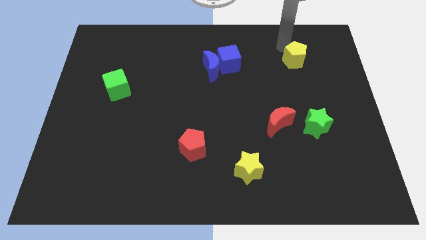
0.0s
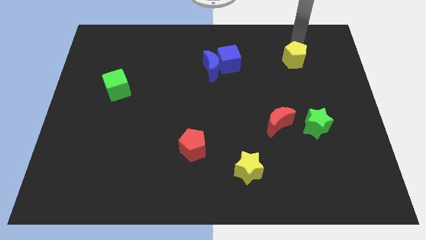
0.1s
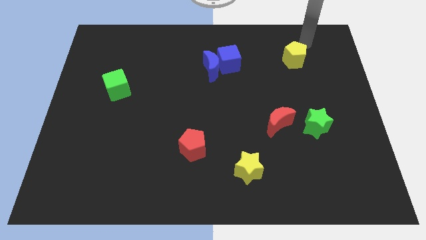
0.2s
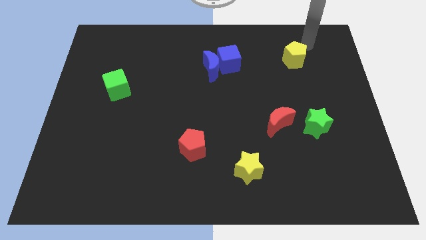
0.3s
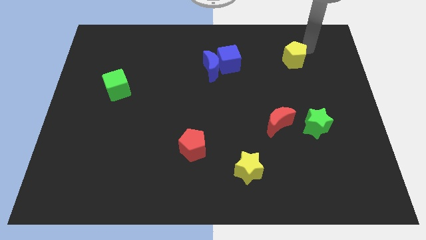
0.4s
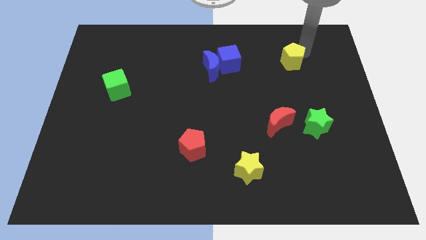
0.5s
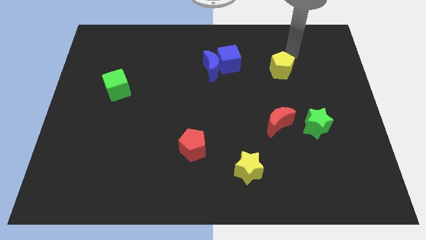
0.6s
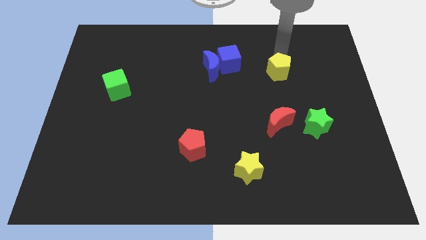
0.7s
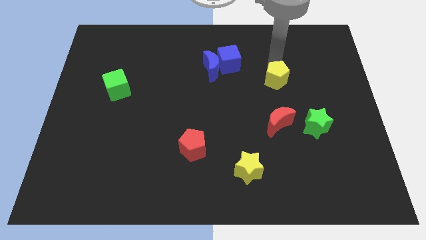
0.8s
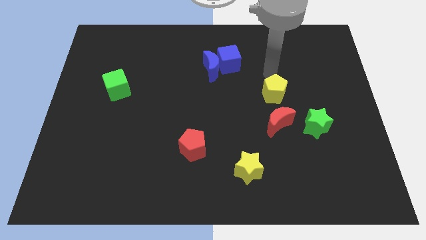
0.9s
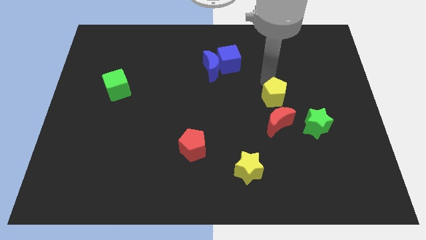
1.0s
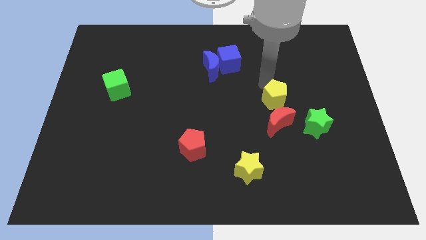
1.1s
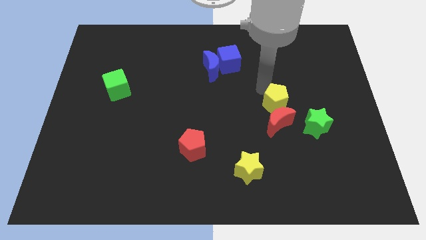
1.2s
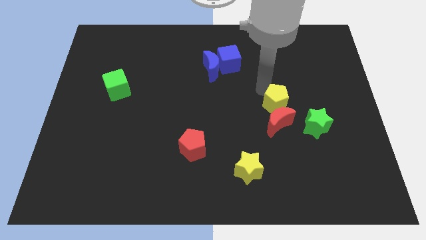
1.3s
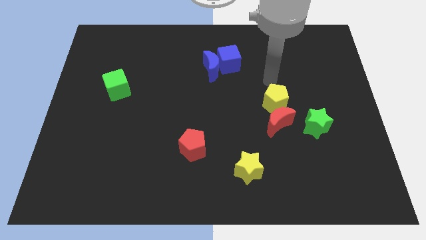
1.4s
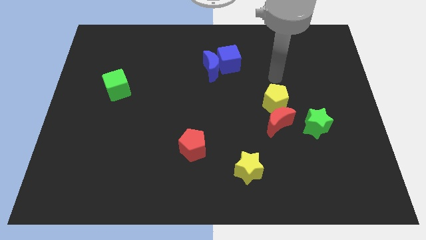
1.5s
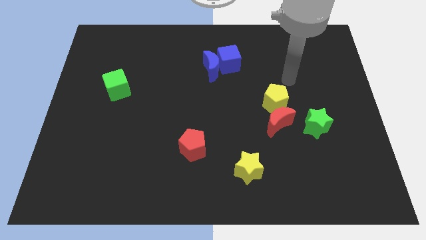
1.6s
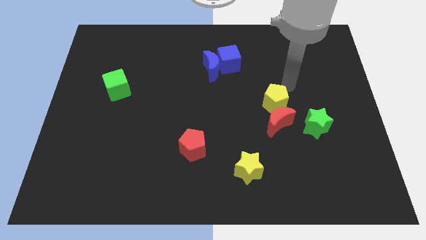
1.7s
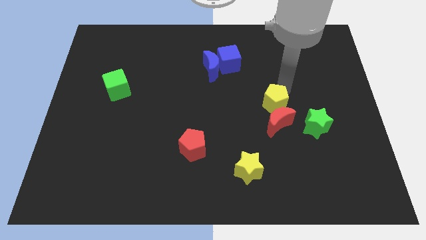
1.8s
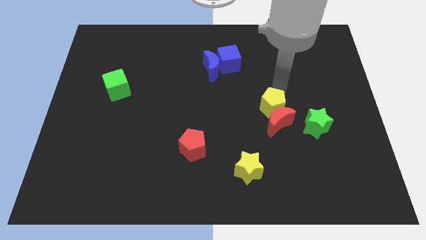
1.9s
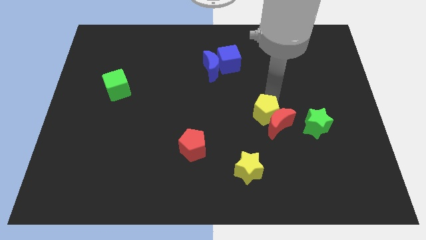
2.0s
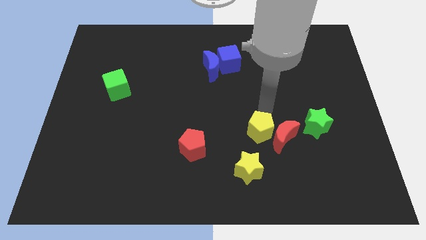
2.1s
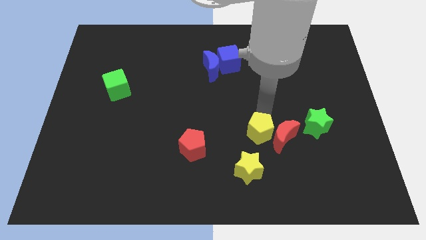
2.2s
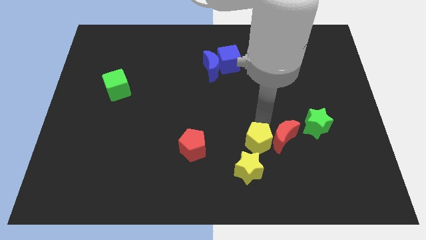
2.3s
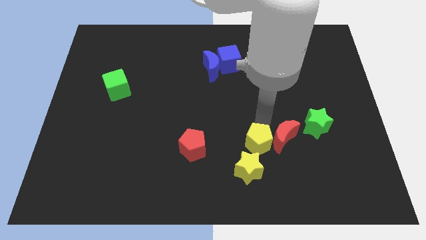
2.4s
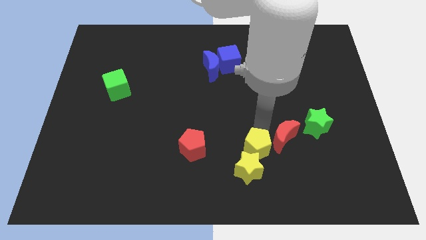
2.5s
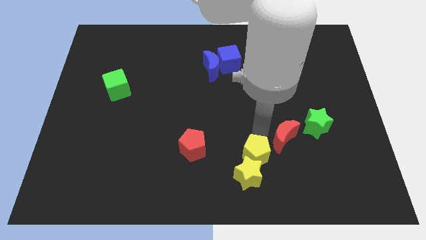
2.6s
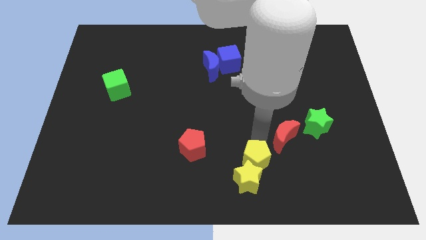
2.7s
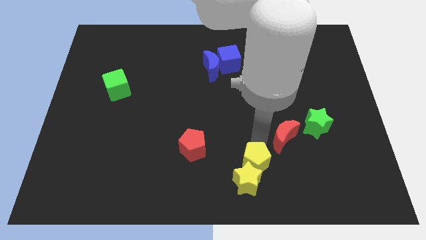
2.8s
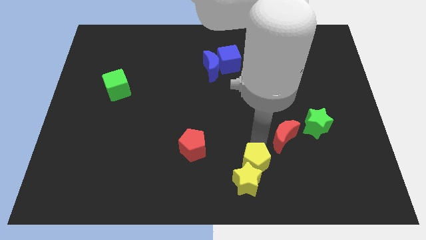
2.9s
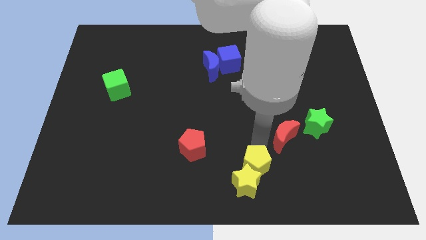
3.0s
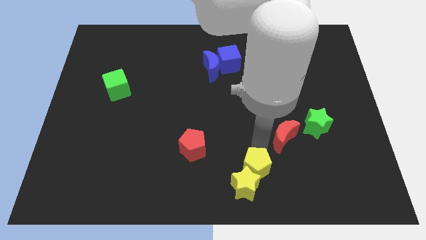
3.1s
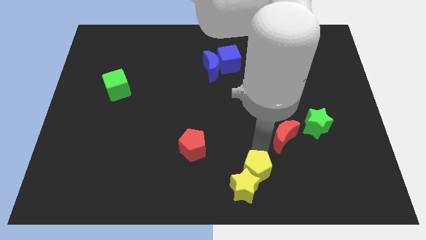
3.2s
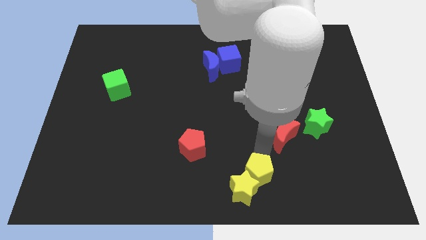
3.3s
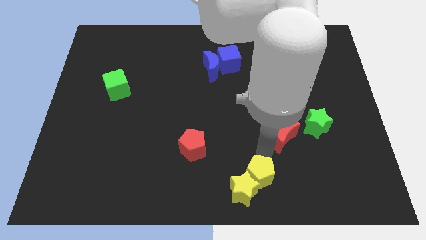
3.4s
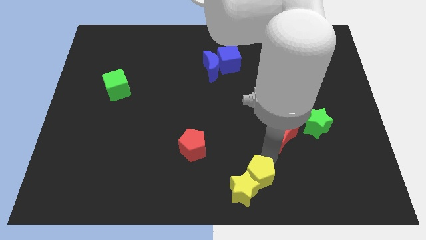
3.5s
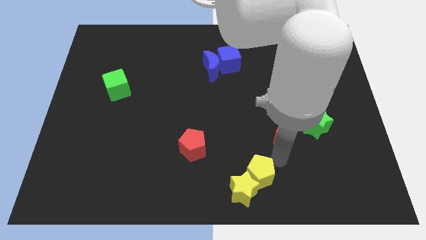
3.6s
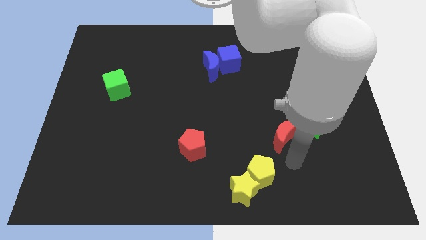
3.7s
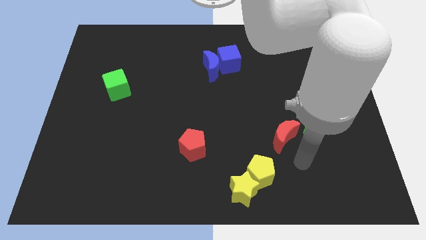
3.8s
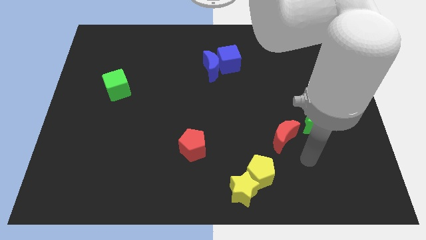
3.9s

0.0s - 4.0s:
push the yellow pentagon into the yellow star

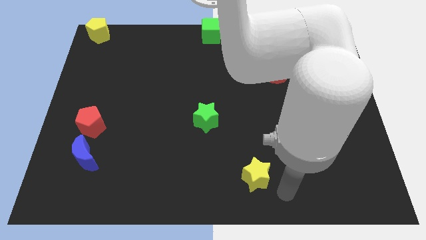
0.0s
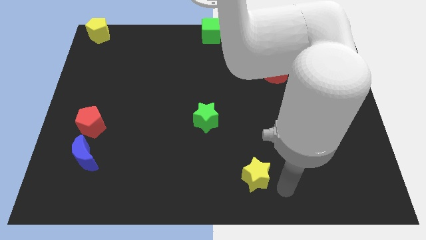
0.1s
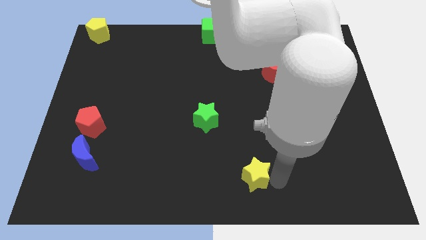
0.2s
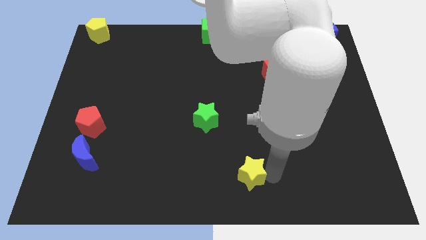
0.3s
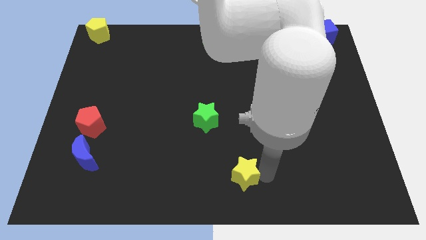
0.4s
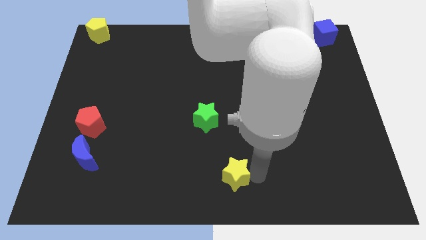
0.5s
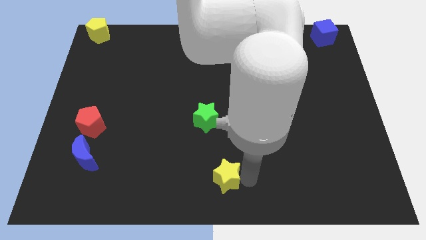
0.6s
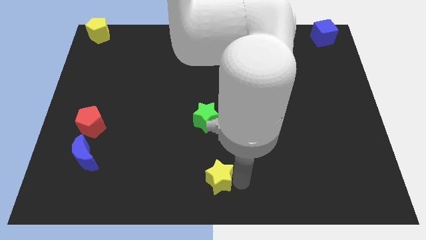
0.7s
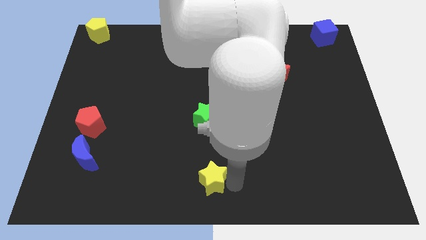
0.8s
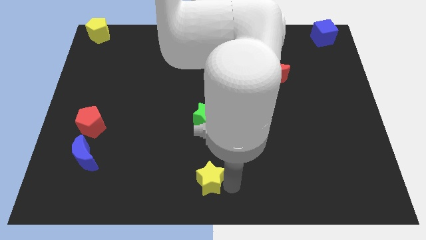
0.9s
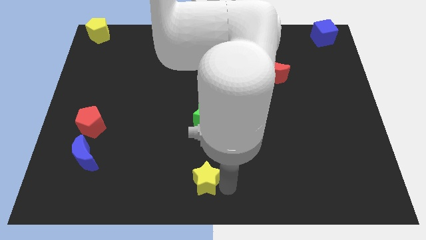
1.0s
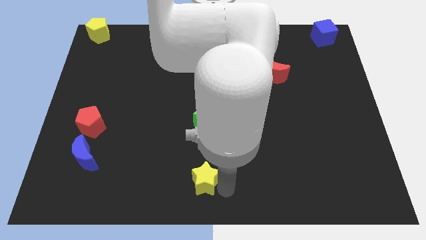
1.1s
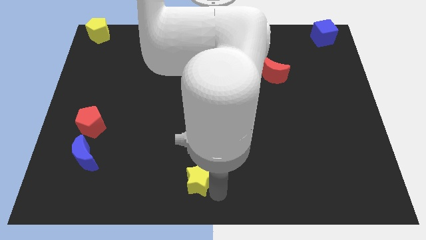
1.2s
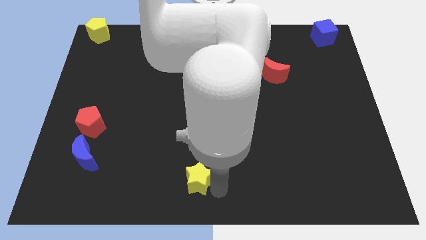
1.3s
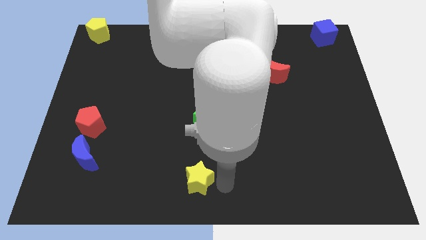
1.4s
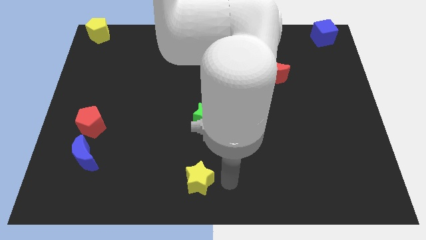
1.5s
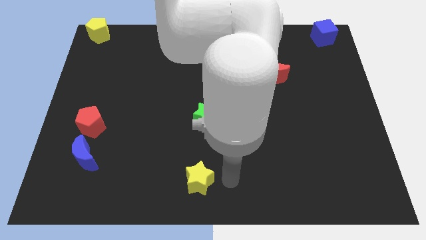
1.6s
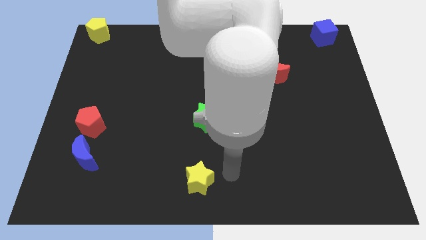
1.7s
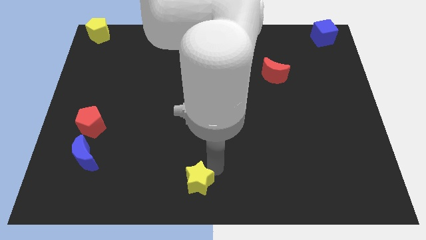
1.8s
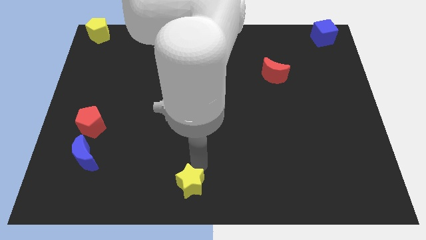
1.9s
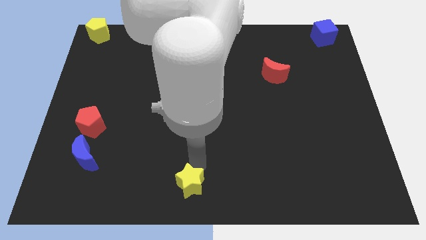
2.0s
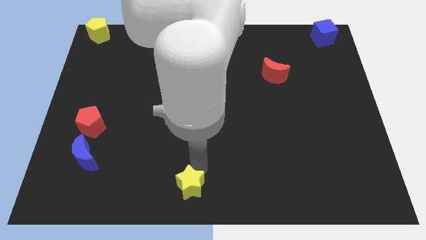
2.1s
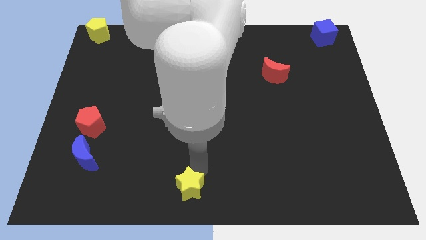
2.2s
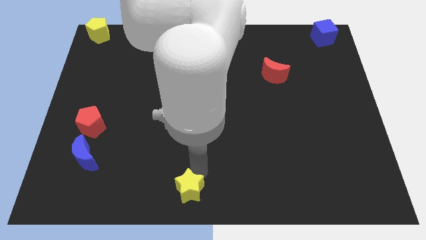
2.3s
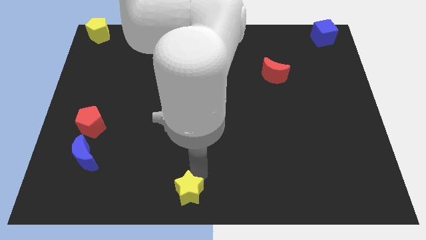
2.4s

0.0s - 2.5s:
move the yellow star to the bottom center of the board

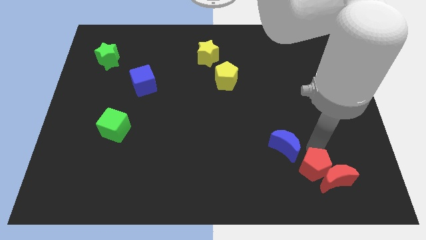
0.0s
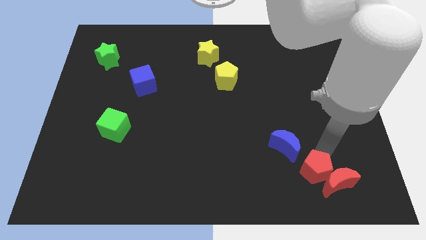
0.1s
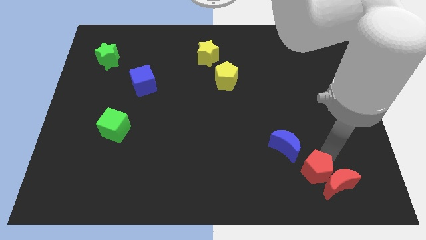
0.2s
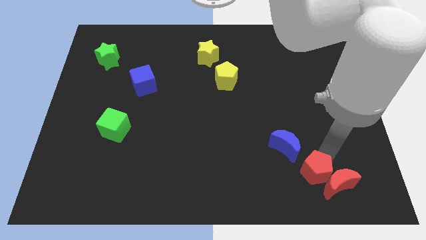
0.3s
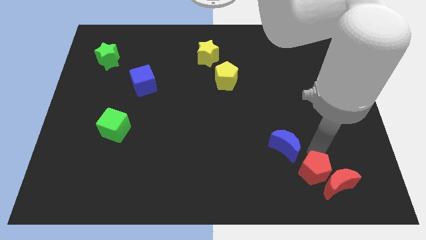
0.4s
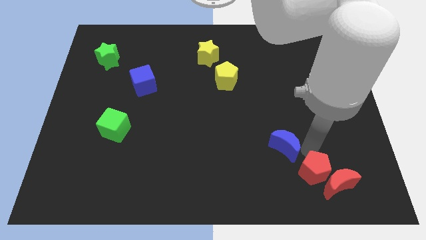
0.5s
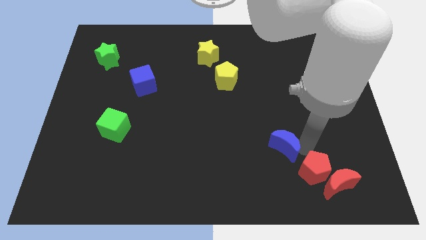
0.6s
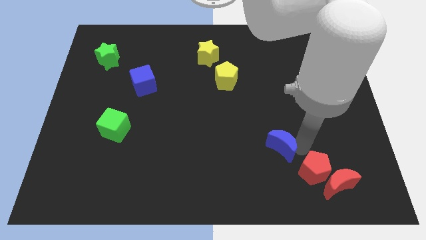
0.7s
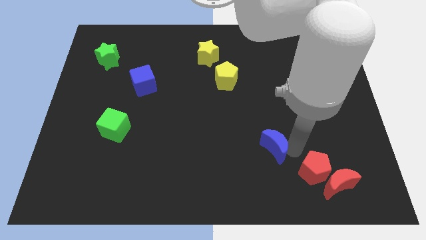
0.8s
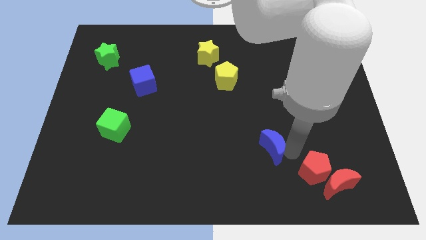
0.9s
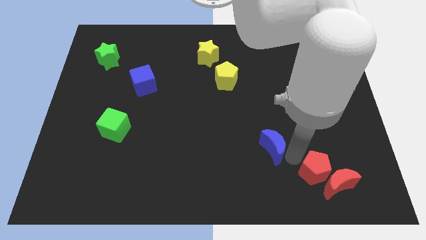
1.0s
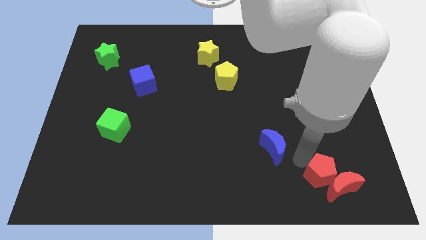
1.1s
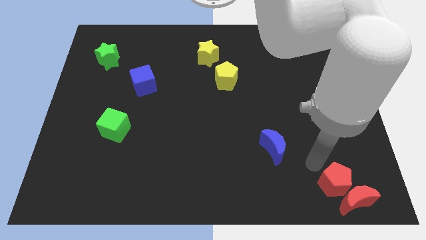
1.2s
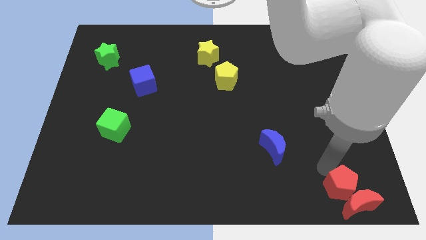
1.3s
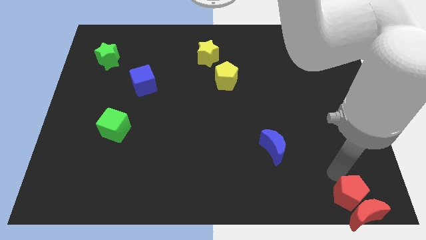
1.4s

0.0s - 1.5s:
move the red pentagon into red moon

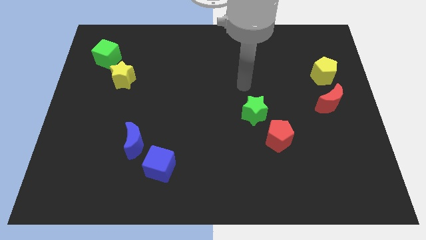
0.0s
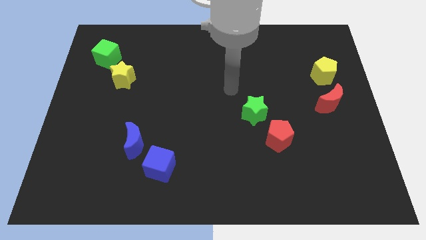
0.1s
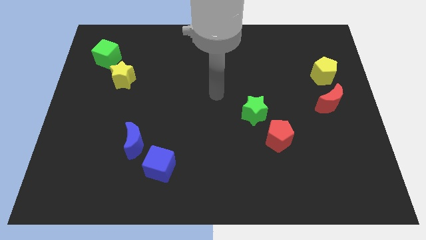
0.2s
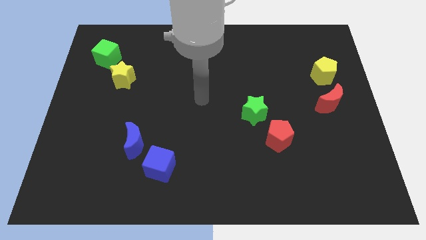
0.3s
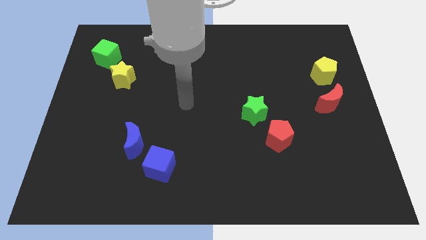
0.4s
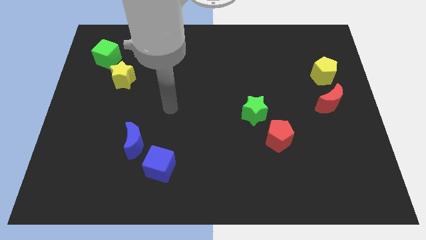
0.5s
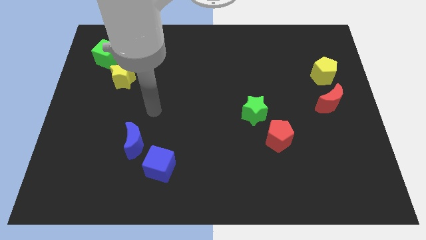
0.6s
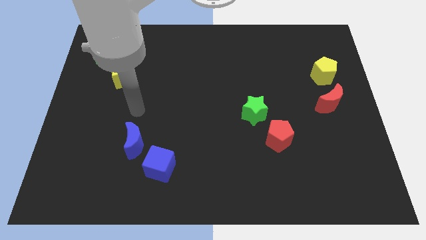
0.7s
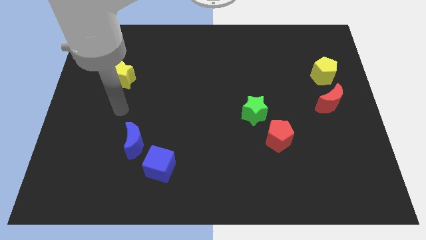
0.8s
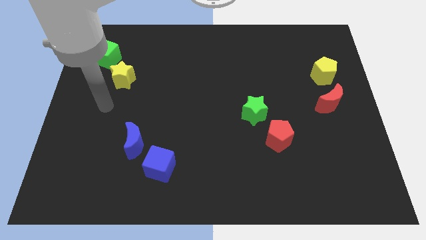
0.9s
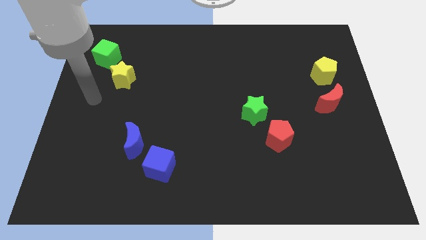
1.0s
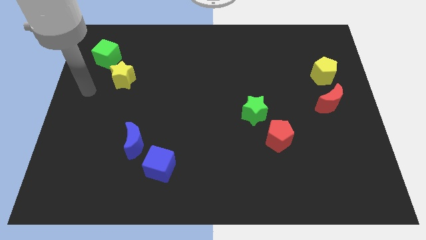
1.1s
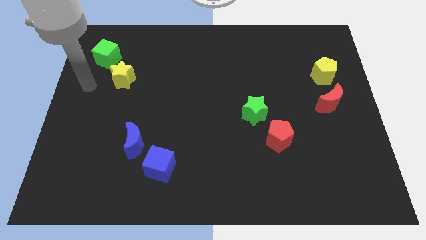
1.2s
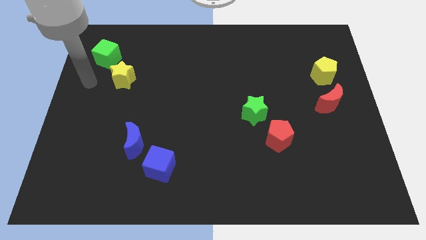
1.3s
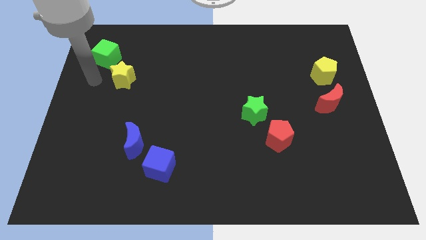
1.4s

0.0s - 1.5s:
point your arm at the left side of the yellow star
